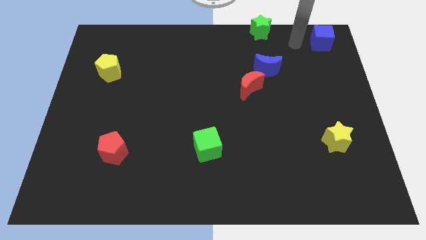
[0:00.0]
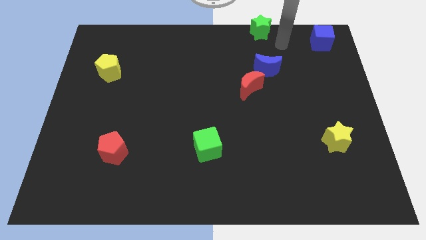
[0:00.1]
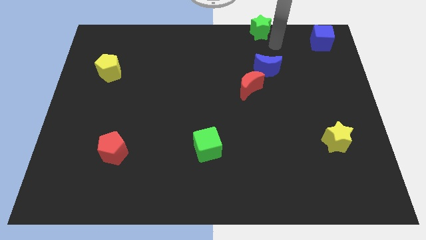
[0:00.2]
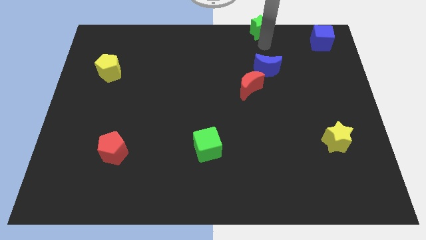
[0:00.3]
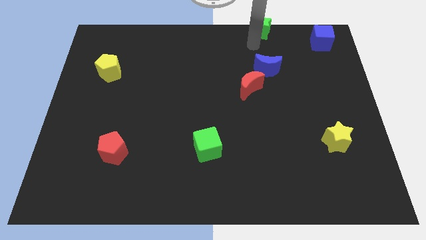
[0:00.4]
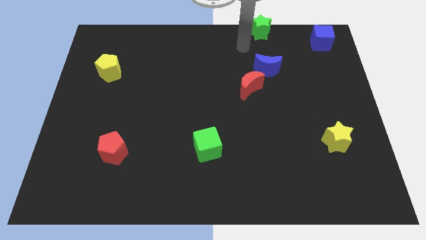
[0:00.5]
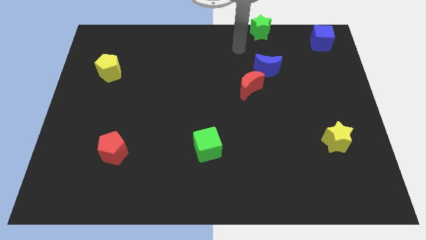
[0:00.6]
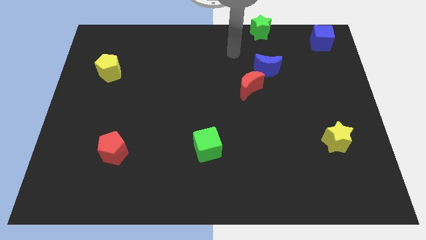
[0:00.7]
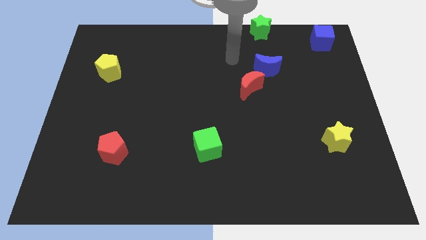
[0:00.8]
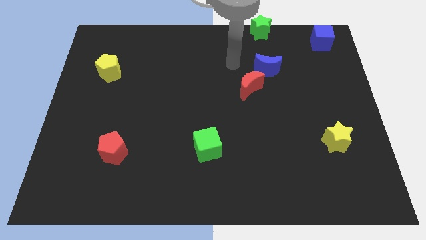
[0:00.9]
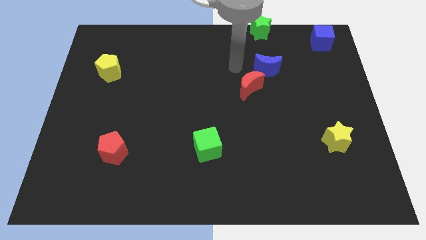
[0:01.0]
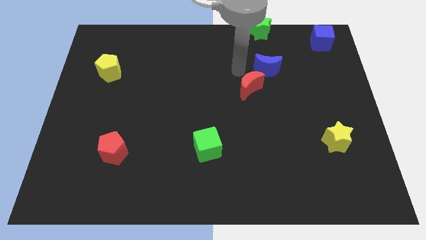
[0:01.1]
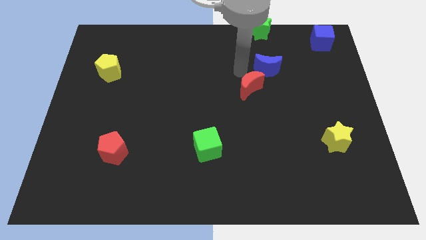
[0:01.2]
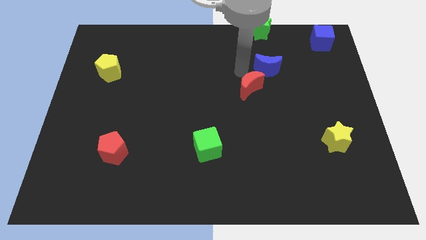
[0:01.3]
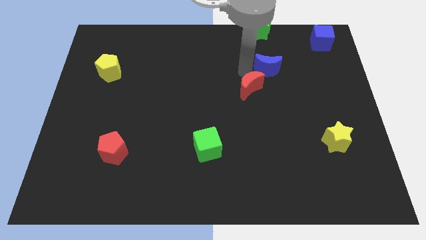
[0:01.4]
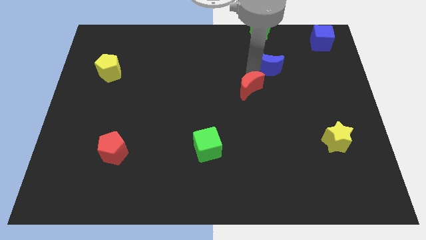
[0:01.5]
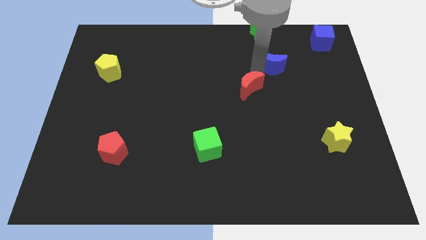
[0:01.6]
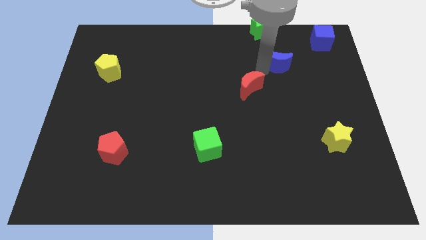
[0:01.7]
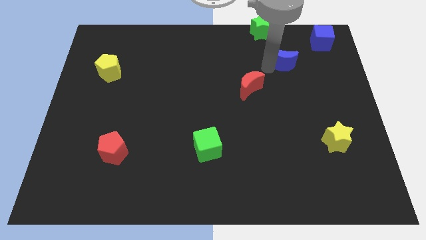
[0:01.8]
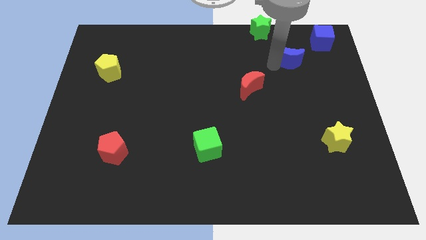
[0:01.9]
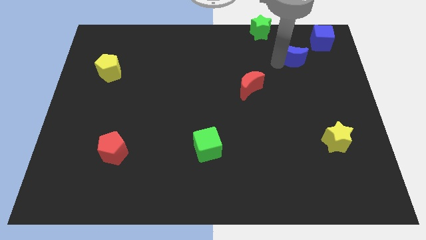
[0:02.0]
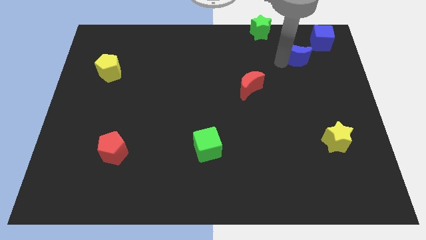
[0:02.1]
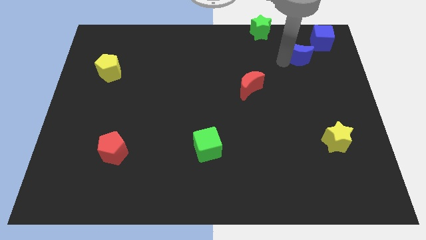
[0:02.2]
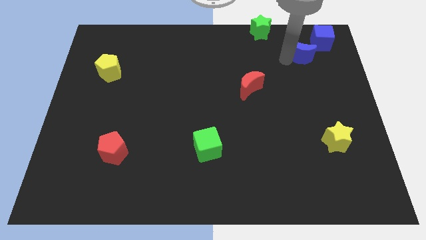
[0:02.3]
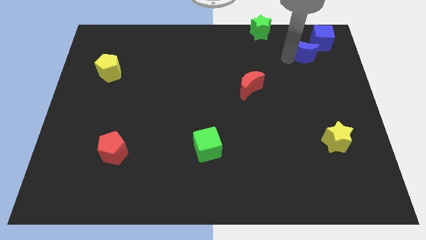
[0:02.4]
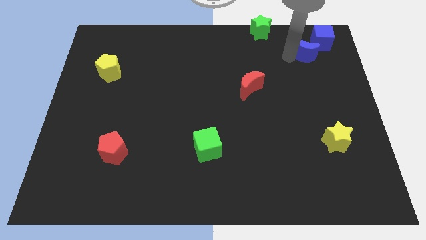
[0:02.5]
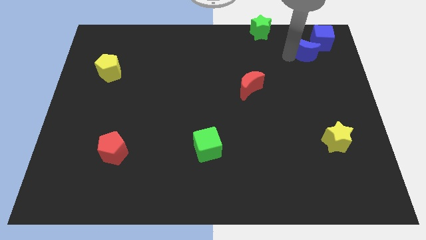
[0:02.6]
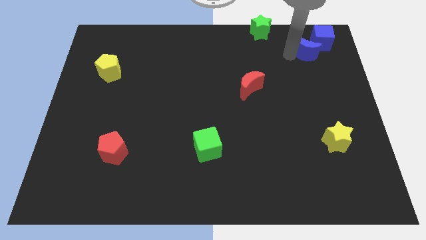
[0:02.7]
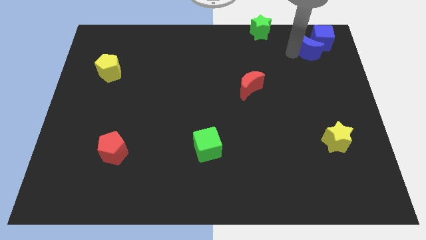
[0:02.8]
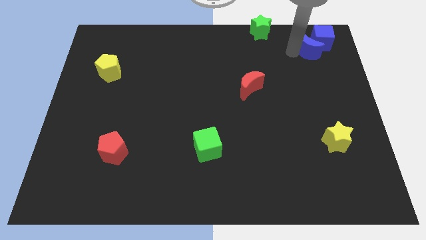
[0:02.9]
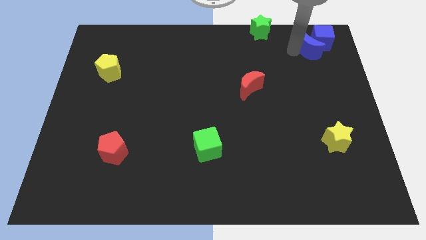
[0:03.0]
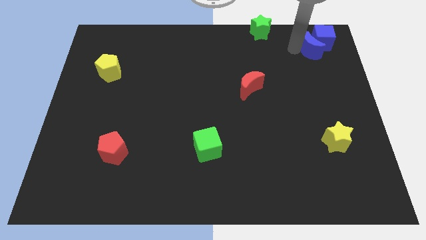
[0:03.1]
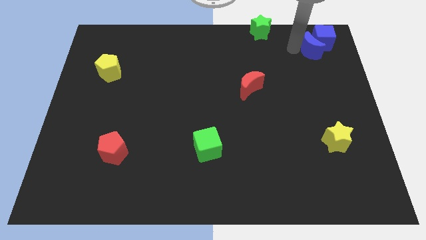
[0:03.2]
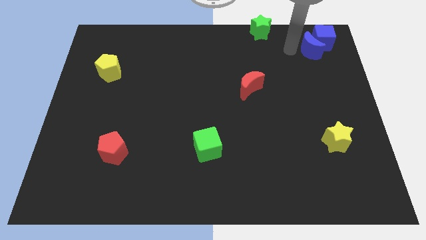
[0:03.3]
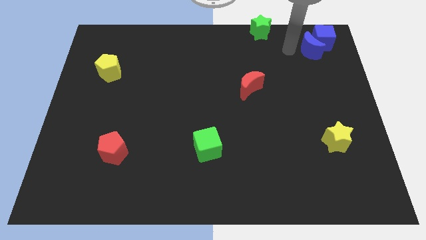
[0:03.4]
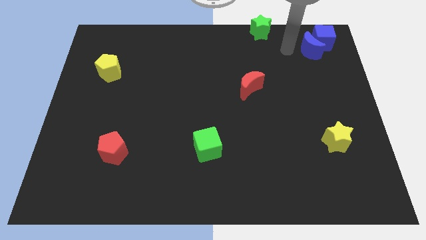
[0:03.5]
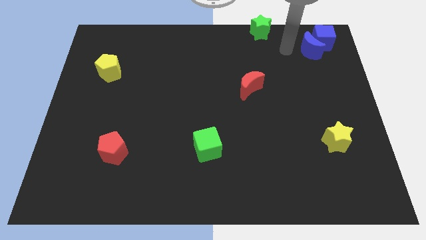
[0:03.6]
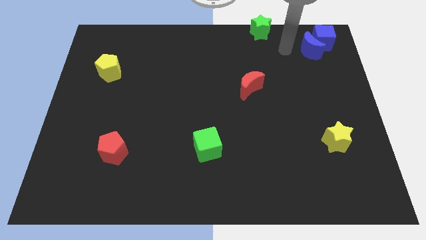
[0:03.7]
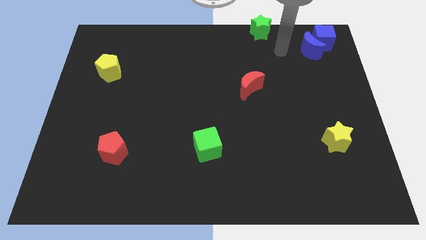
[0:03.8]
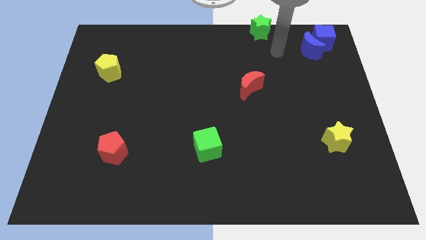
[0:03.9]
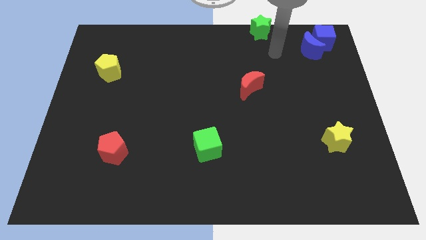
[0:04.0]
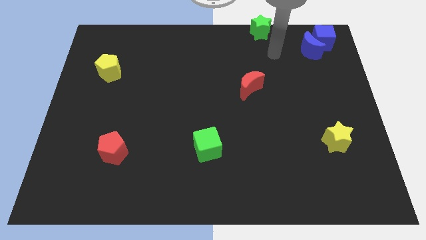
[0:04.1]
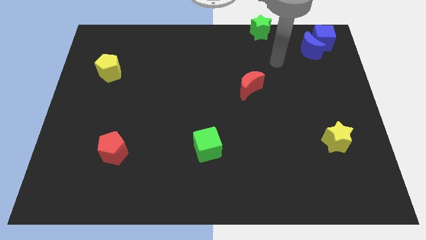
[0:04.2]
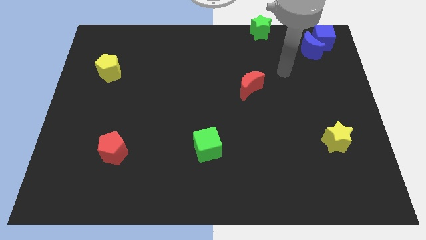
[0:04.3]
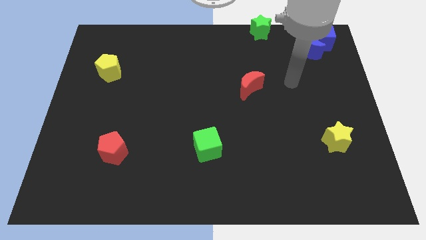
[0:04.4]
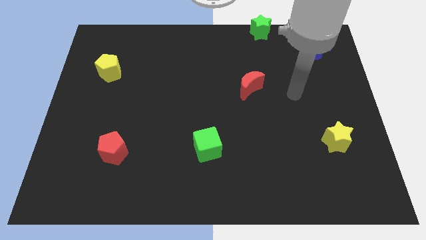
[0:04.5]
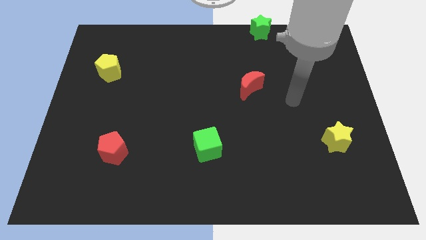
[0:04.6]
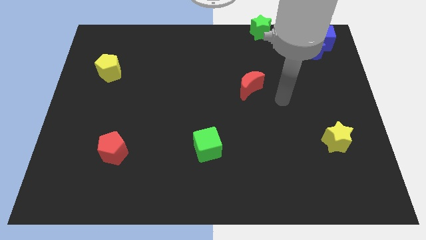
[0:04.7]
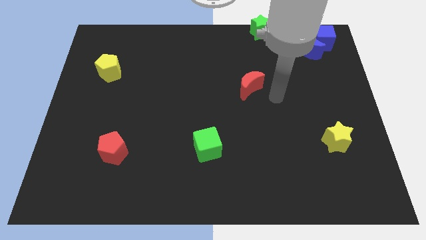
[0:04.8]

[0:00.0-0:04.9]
place the blue moon to the bottom left of the blue cube

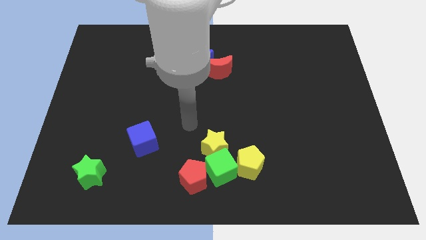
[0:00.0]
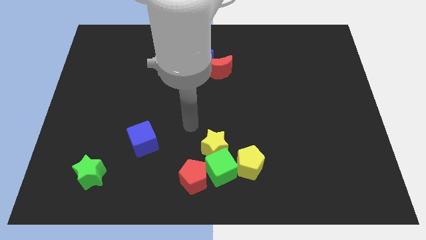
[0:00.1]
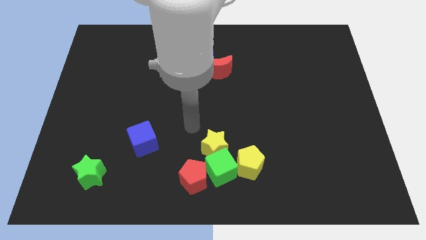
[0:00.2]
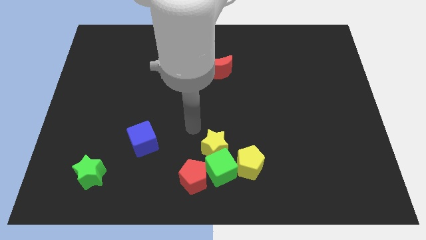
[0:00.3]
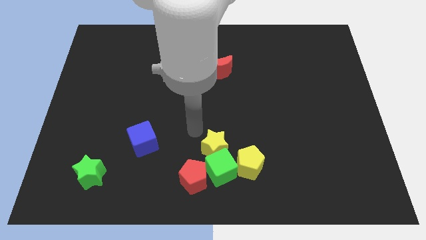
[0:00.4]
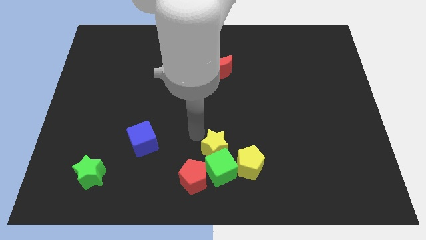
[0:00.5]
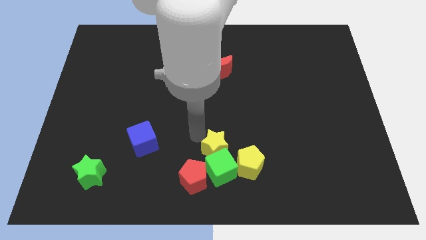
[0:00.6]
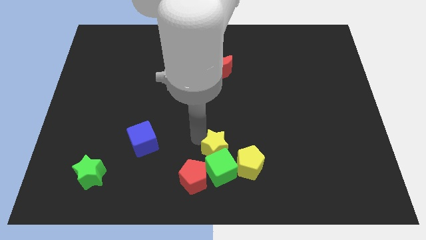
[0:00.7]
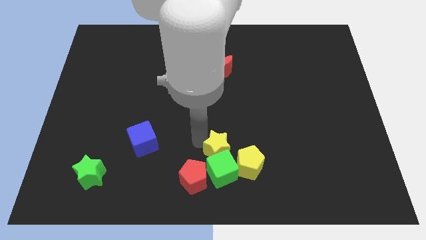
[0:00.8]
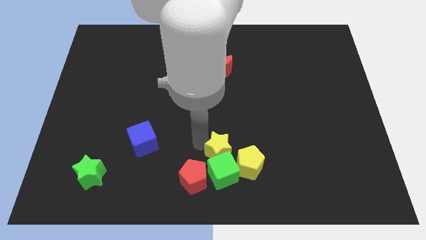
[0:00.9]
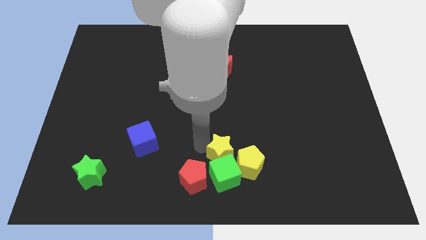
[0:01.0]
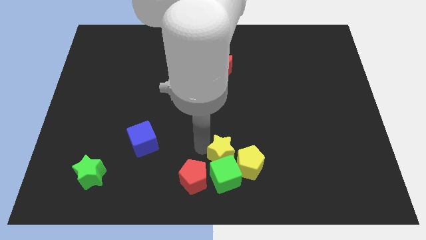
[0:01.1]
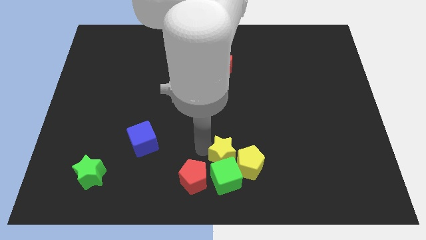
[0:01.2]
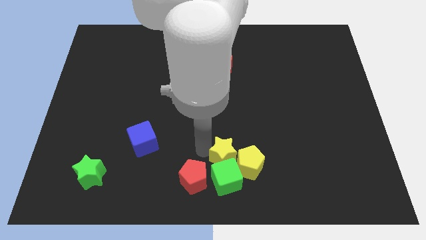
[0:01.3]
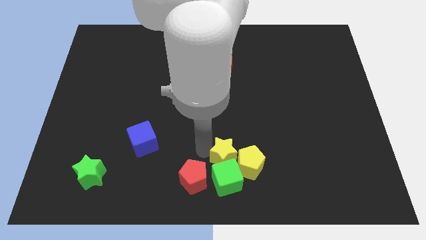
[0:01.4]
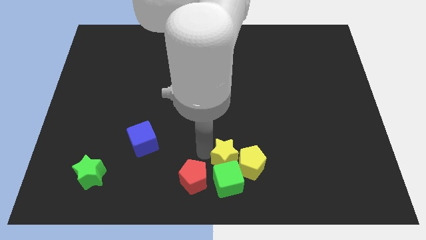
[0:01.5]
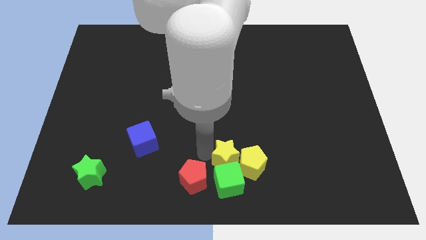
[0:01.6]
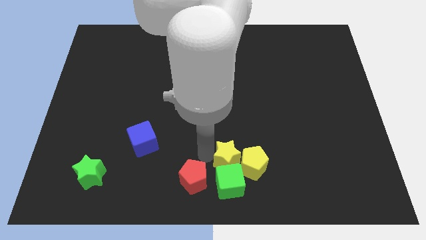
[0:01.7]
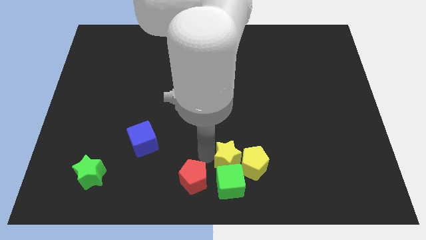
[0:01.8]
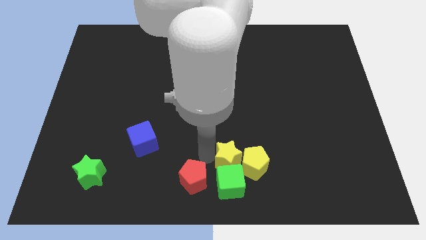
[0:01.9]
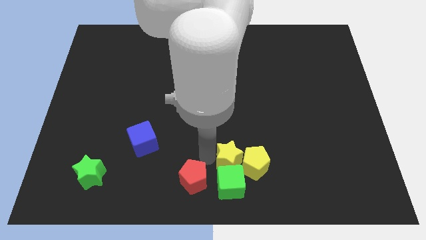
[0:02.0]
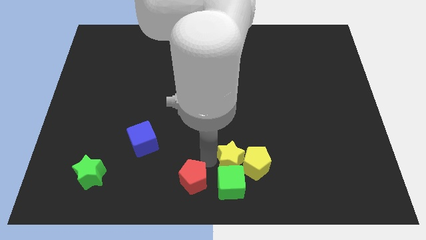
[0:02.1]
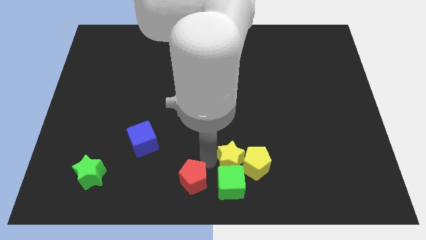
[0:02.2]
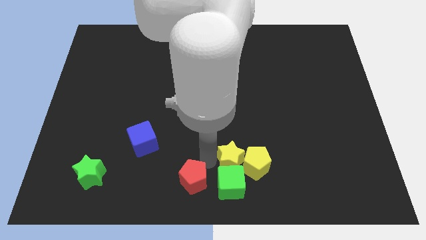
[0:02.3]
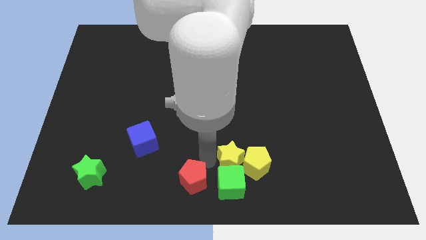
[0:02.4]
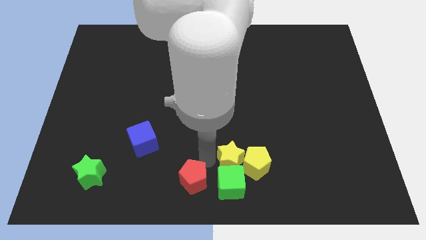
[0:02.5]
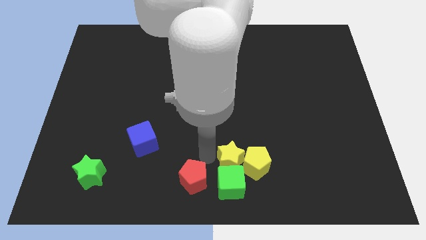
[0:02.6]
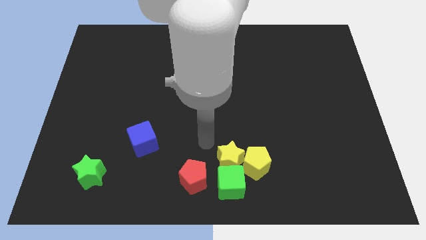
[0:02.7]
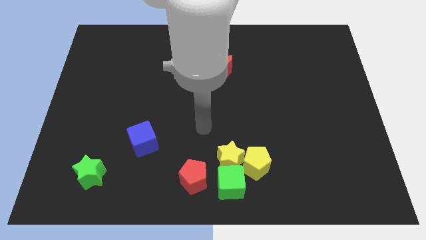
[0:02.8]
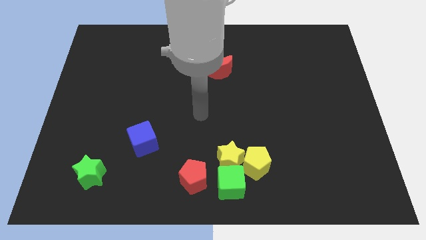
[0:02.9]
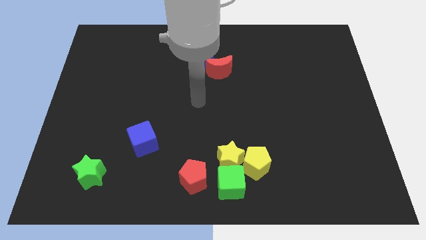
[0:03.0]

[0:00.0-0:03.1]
push the yellow star into the green cube

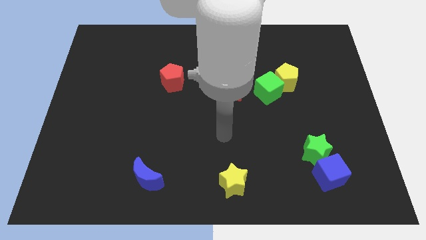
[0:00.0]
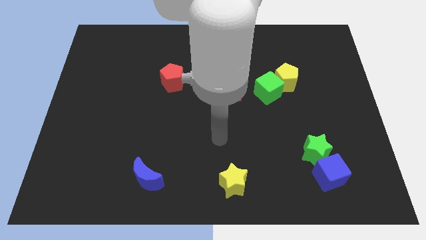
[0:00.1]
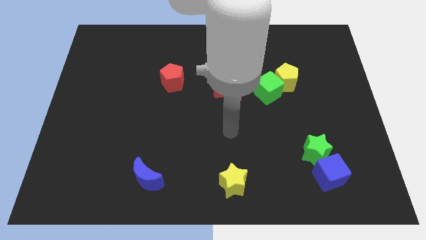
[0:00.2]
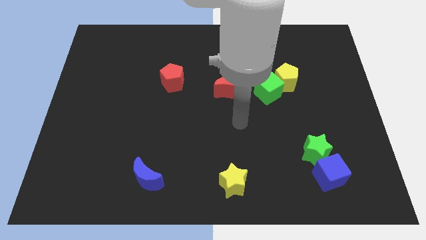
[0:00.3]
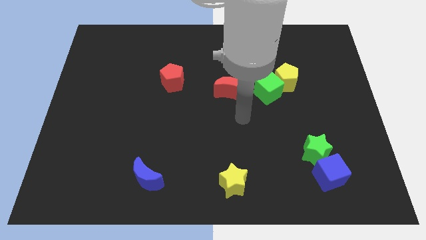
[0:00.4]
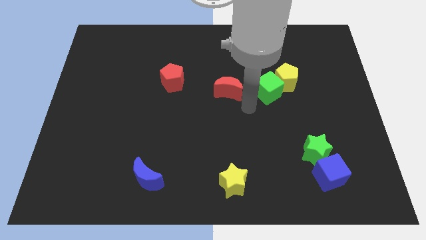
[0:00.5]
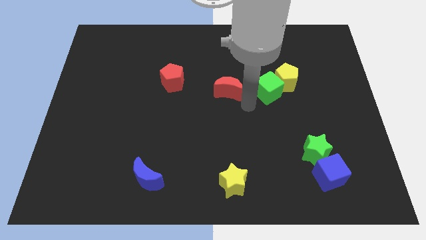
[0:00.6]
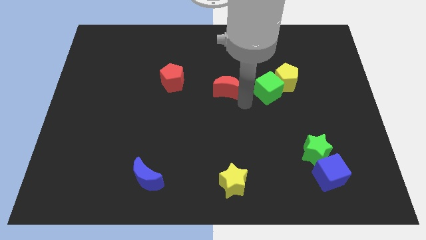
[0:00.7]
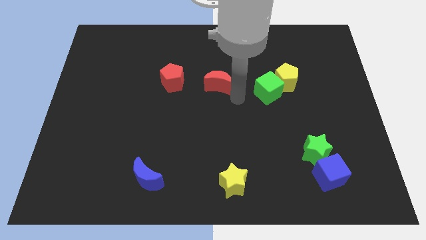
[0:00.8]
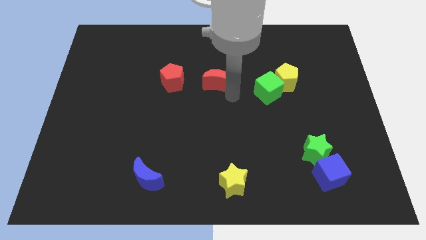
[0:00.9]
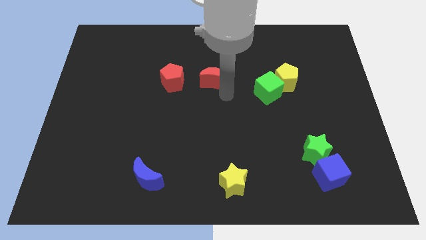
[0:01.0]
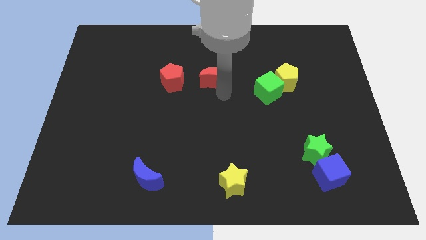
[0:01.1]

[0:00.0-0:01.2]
move the red crescent to right of red pentagon
